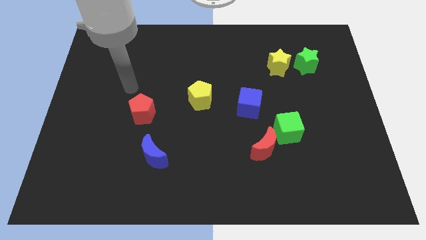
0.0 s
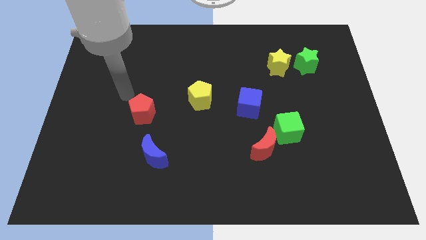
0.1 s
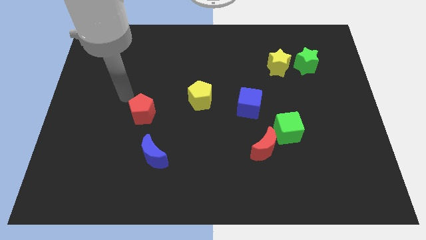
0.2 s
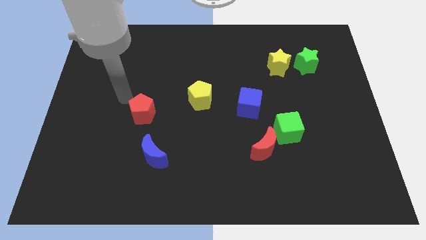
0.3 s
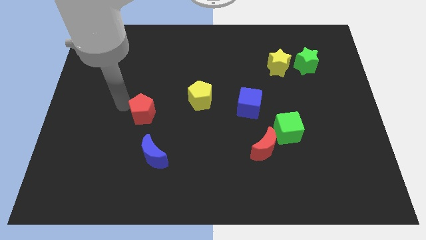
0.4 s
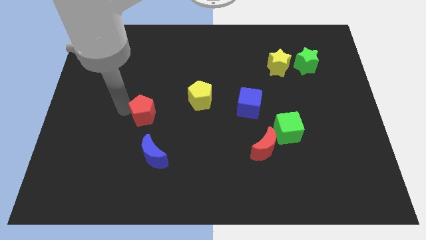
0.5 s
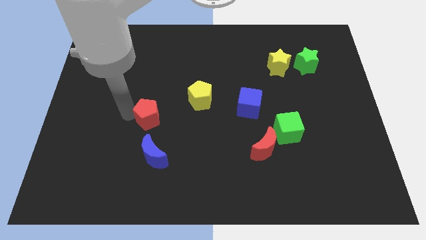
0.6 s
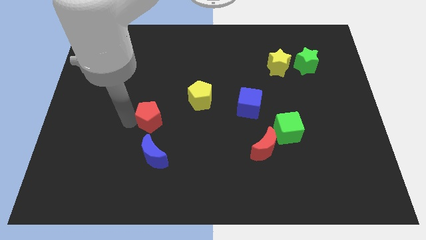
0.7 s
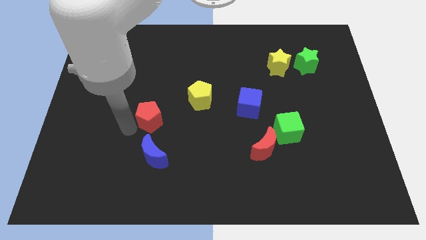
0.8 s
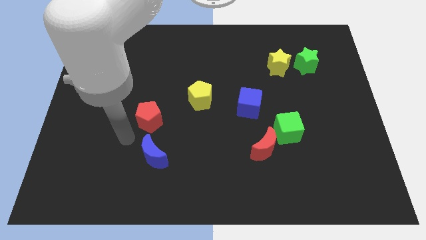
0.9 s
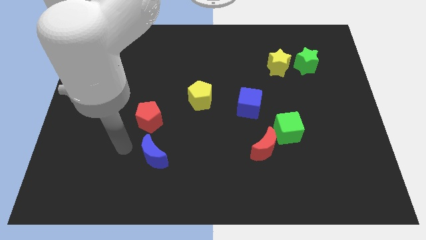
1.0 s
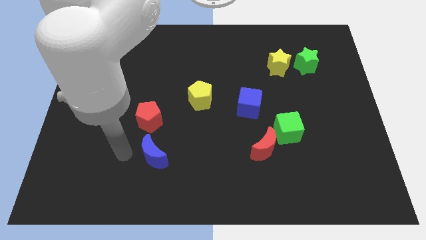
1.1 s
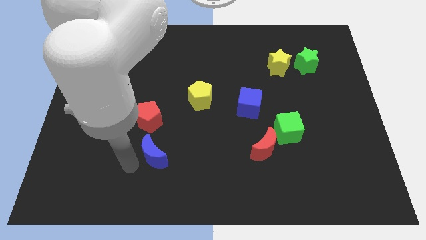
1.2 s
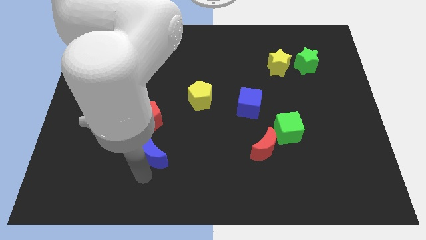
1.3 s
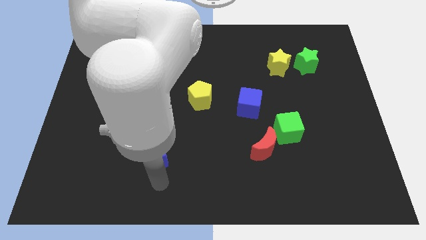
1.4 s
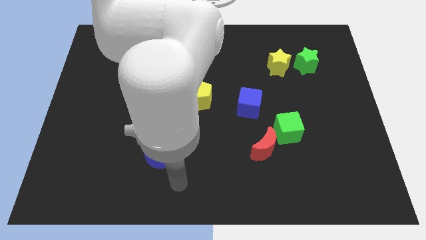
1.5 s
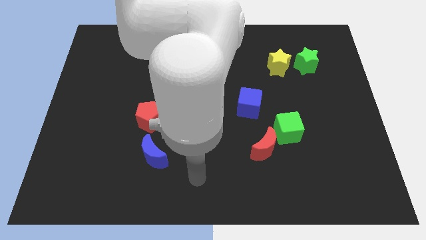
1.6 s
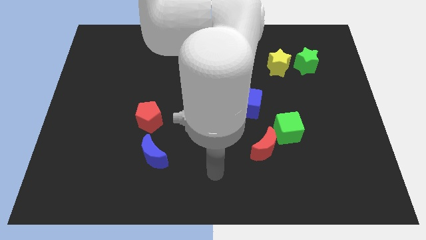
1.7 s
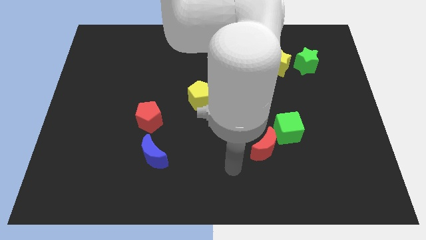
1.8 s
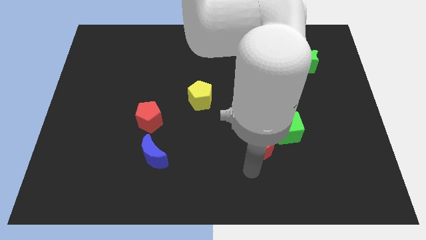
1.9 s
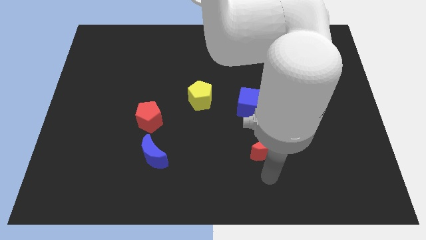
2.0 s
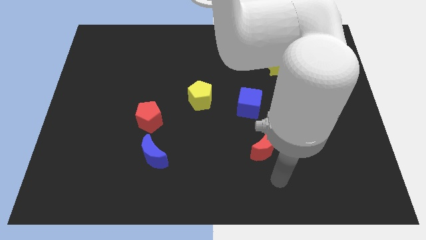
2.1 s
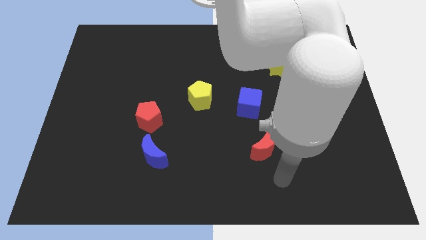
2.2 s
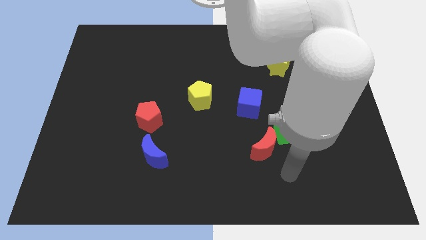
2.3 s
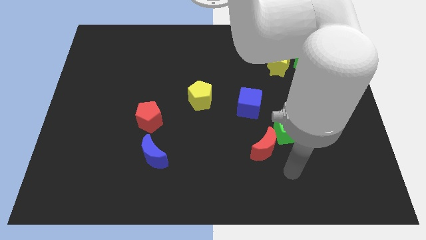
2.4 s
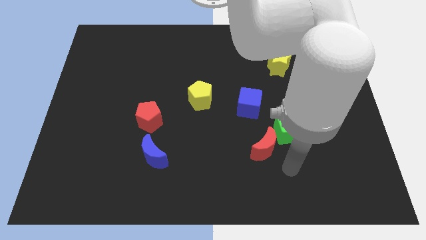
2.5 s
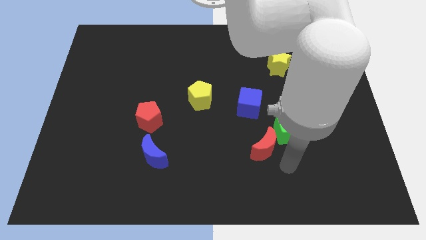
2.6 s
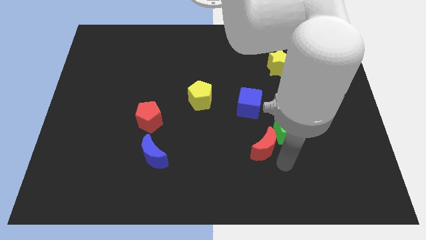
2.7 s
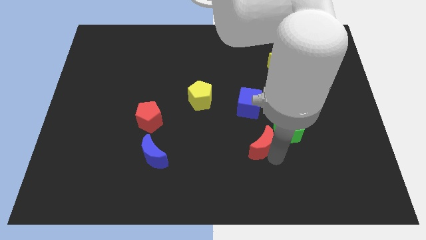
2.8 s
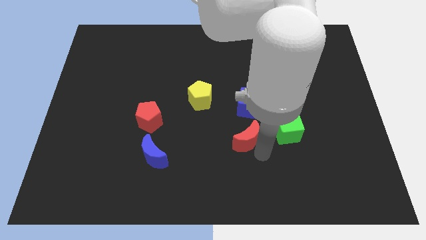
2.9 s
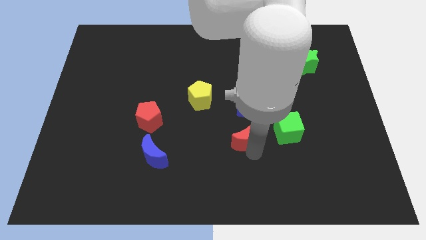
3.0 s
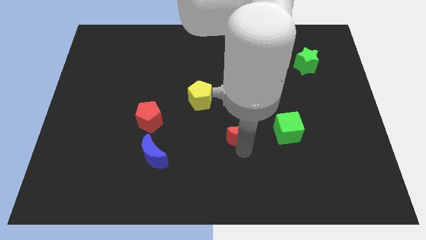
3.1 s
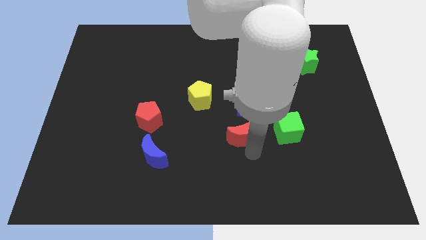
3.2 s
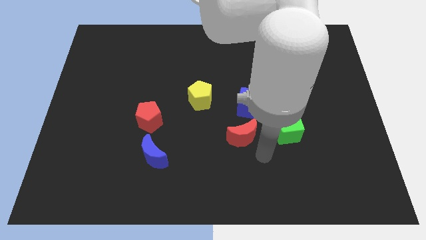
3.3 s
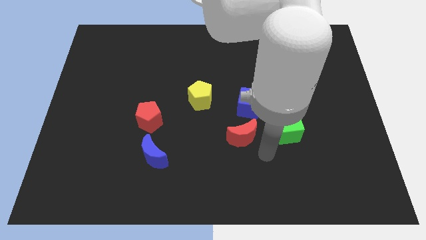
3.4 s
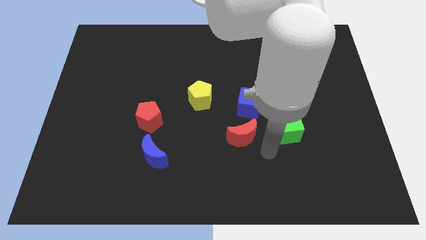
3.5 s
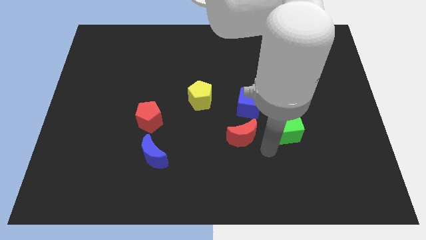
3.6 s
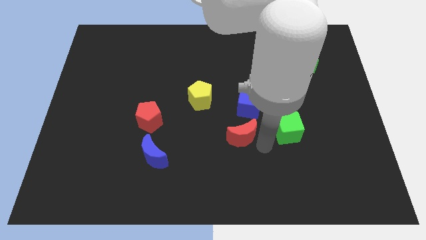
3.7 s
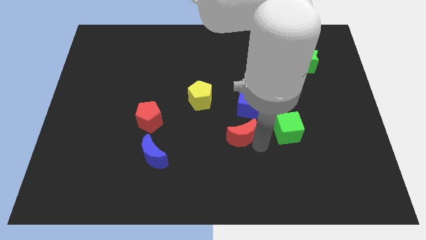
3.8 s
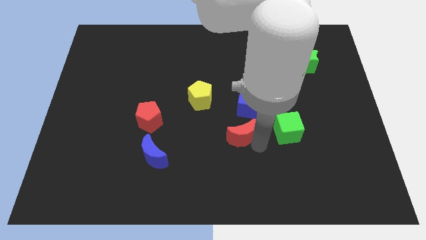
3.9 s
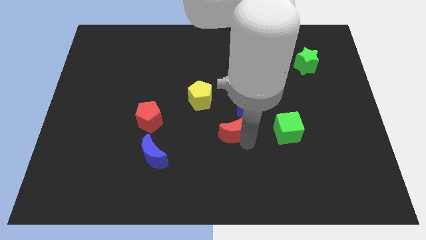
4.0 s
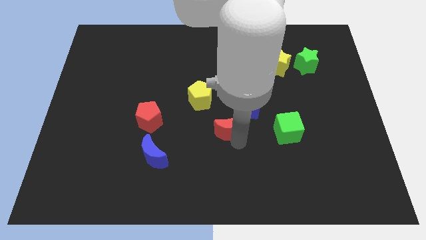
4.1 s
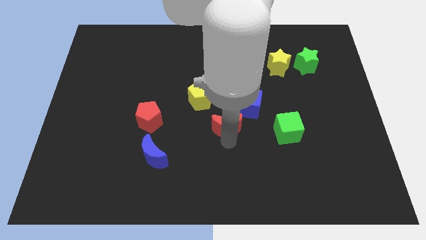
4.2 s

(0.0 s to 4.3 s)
place the red moon in between the red pentagon and green cube

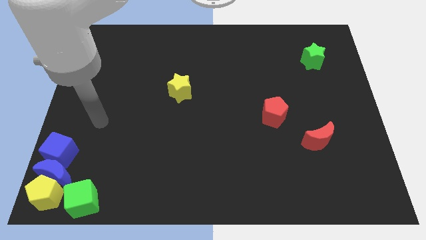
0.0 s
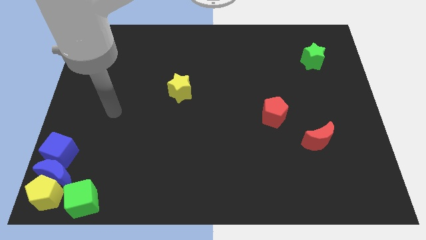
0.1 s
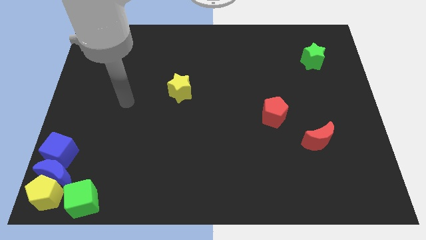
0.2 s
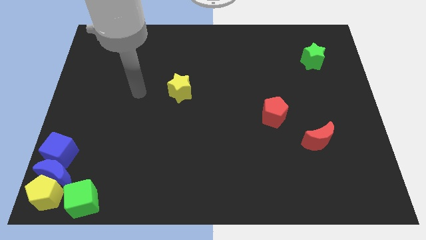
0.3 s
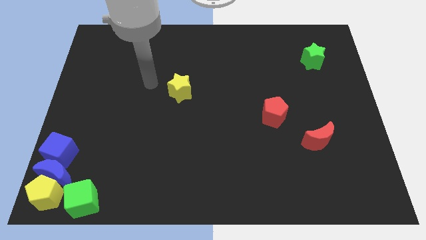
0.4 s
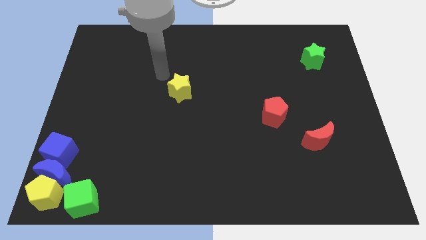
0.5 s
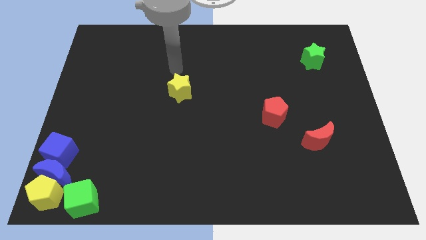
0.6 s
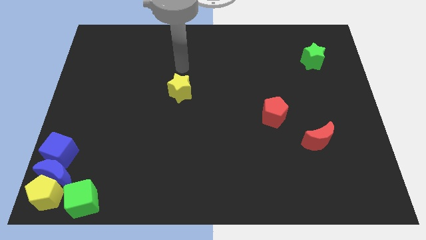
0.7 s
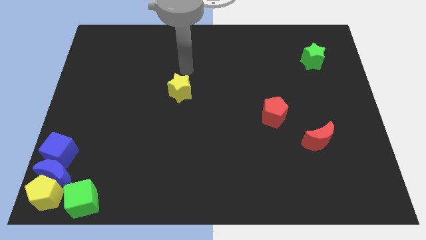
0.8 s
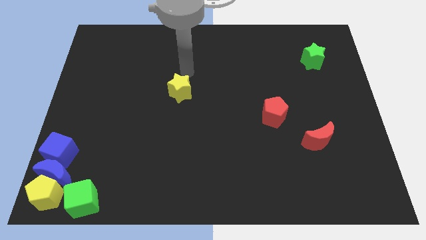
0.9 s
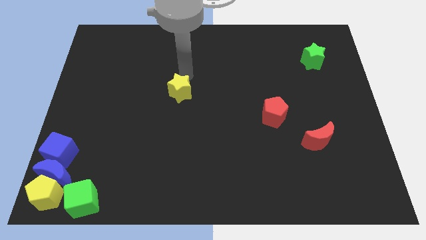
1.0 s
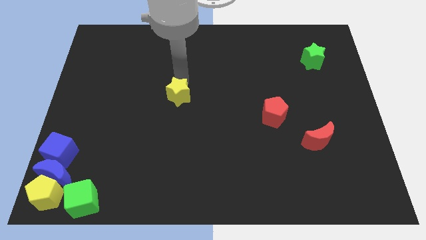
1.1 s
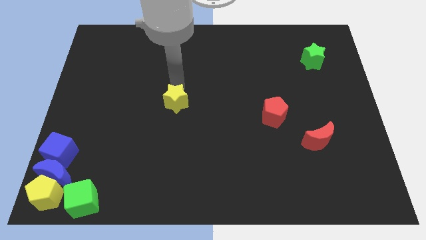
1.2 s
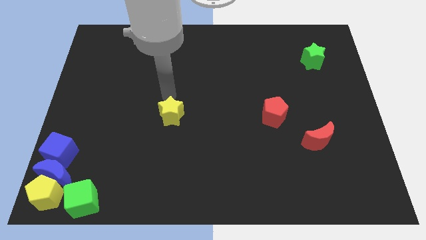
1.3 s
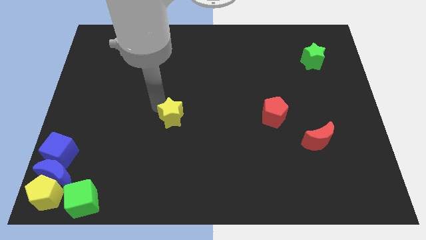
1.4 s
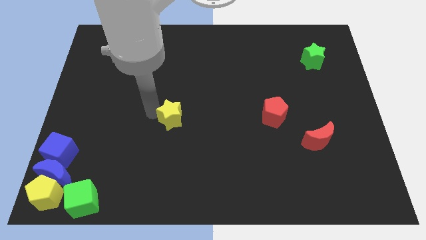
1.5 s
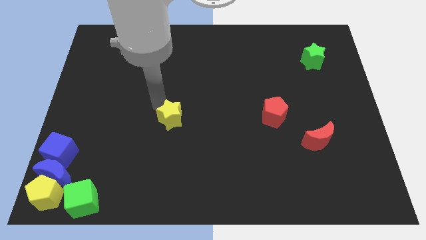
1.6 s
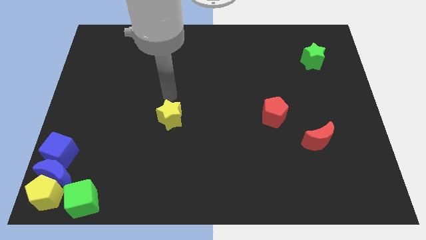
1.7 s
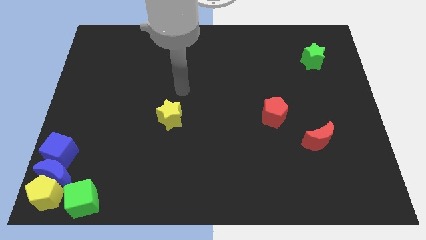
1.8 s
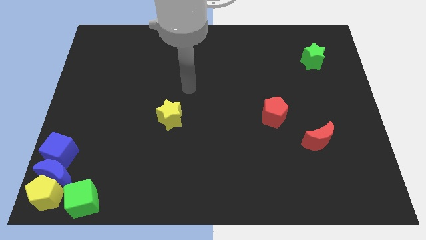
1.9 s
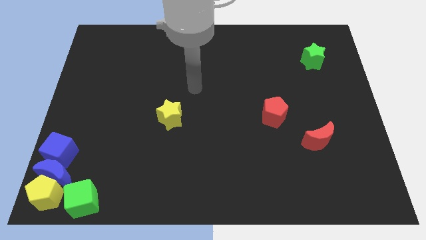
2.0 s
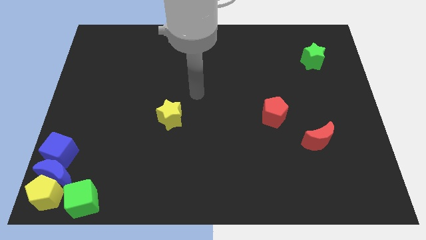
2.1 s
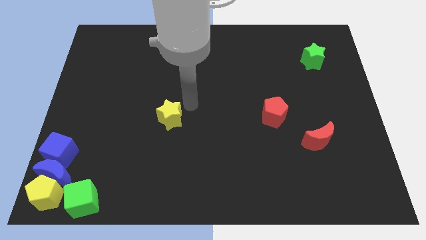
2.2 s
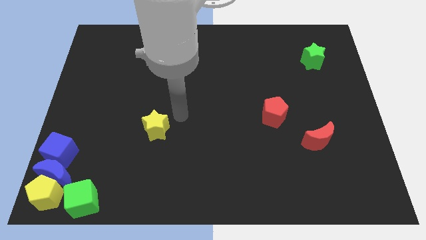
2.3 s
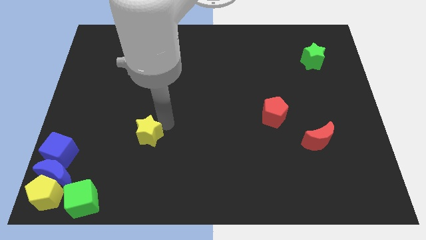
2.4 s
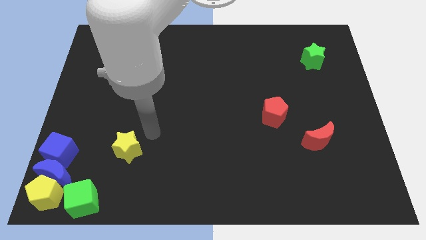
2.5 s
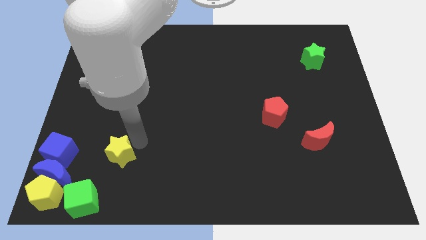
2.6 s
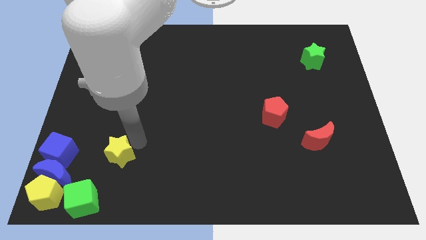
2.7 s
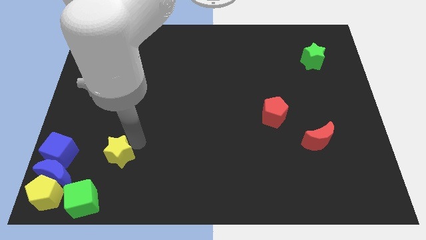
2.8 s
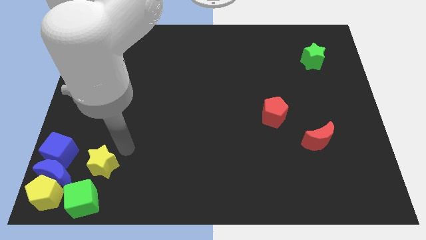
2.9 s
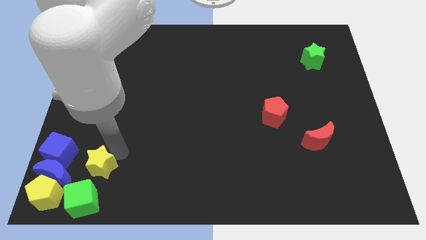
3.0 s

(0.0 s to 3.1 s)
push yellow star towards green cube

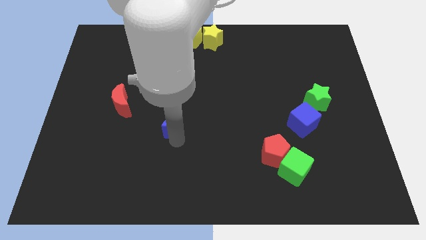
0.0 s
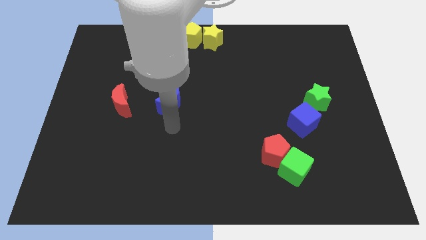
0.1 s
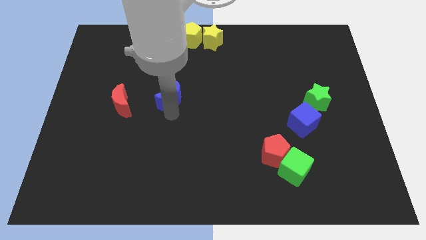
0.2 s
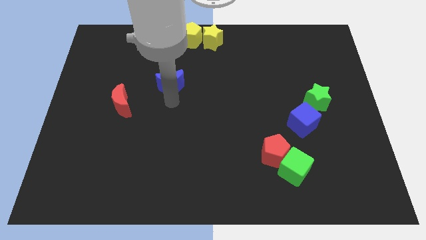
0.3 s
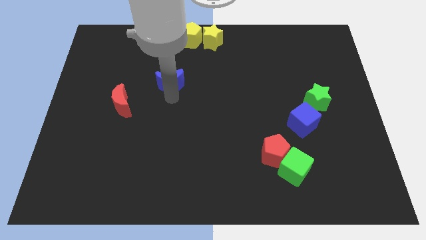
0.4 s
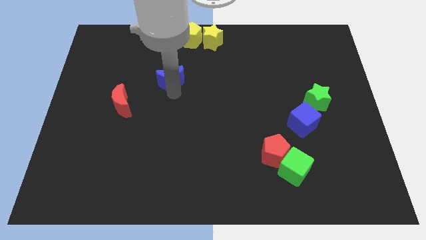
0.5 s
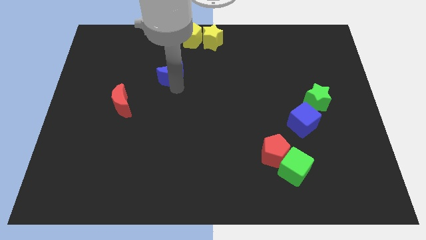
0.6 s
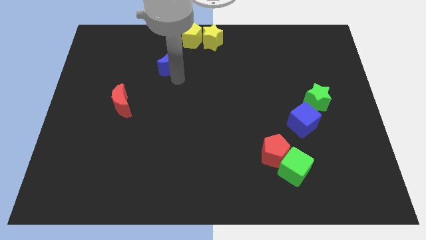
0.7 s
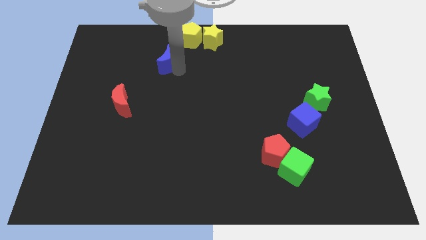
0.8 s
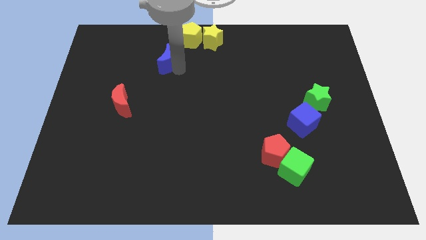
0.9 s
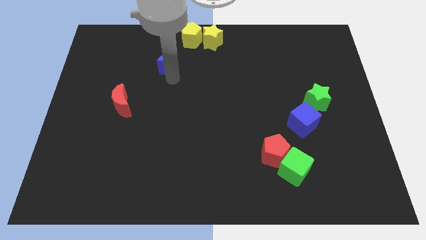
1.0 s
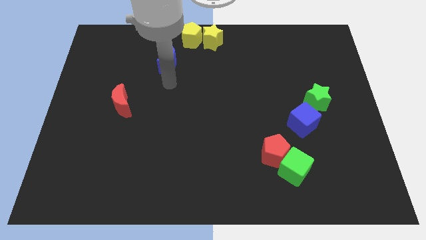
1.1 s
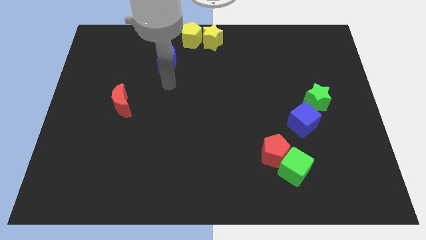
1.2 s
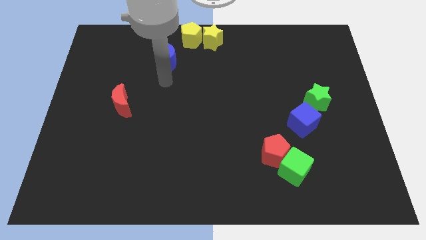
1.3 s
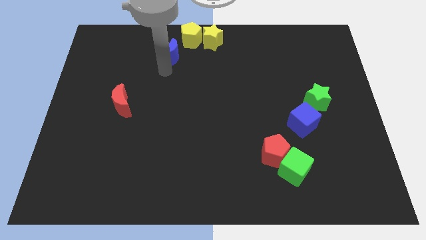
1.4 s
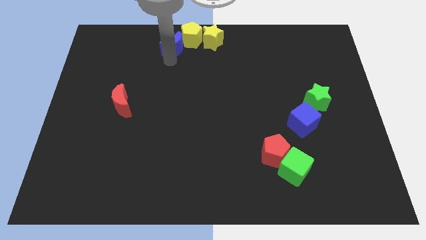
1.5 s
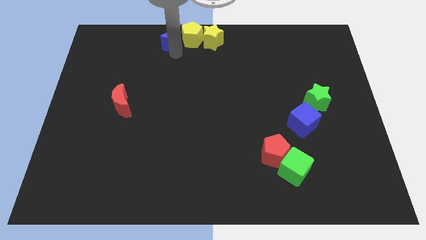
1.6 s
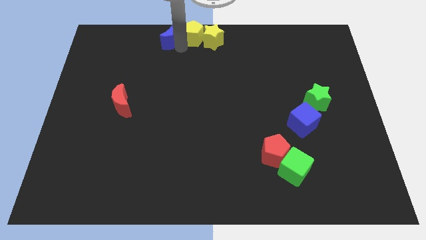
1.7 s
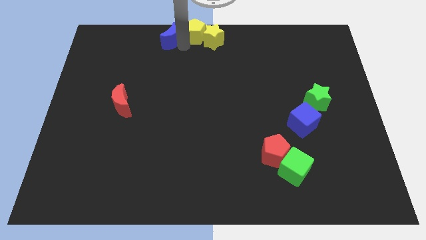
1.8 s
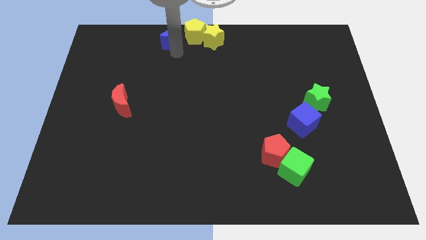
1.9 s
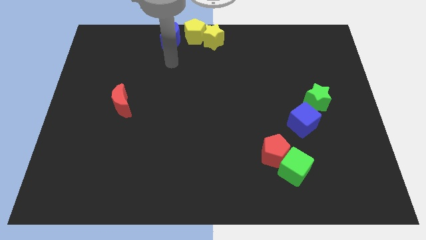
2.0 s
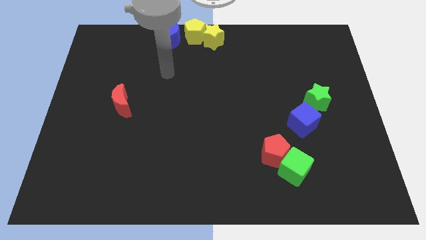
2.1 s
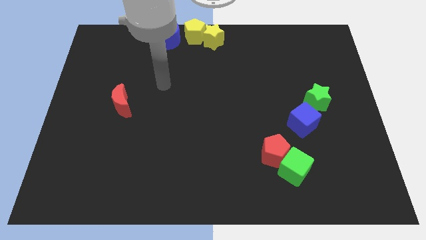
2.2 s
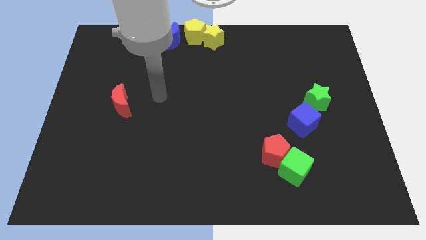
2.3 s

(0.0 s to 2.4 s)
place blue moon beside yellow pentagon
